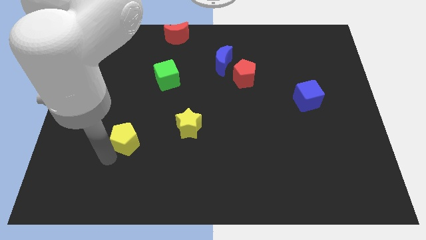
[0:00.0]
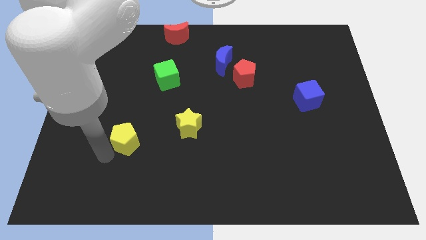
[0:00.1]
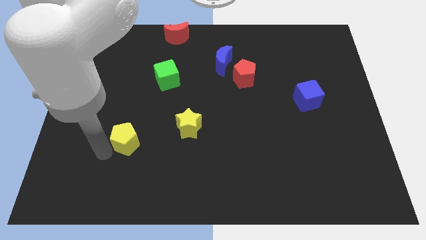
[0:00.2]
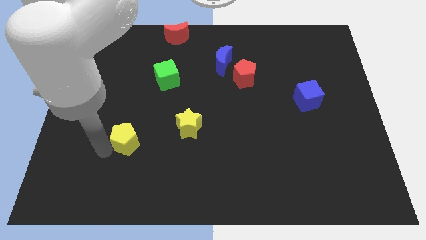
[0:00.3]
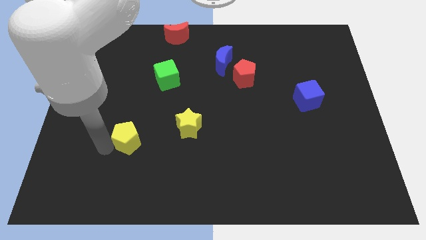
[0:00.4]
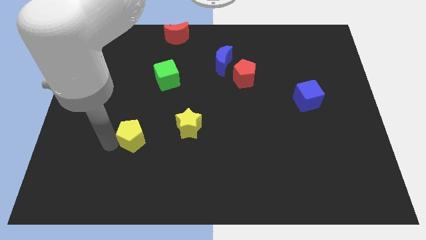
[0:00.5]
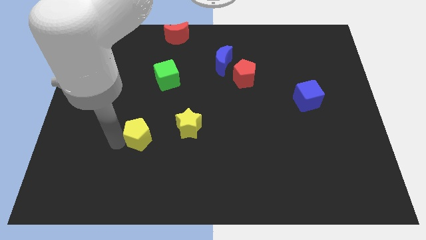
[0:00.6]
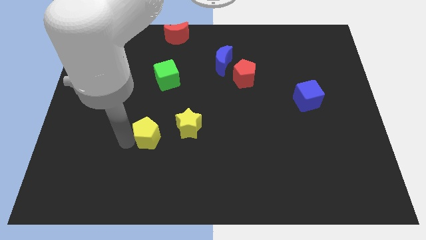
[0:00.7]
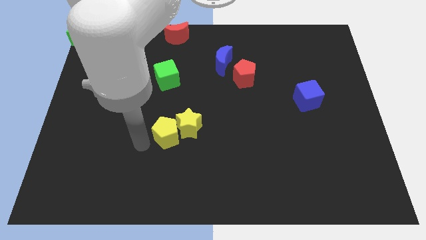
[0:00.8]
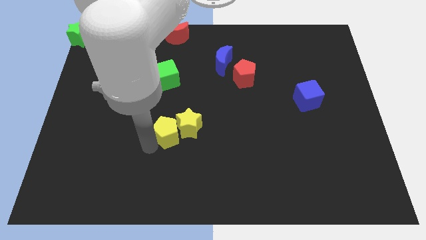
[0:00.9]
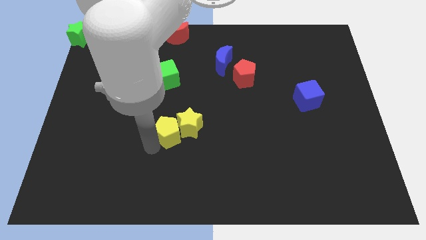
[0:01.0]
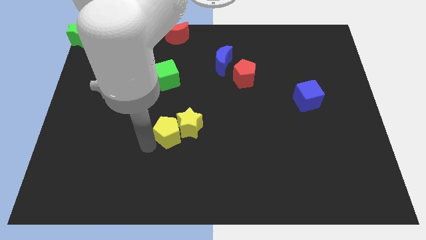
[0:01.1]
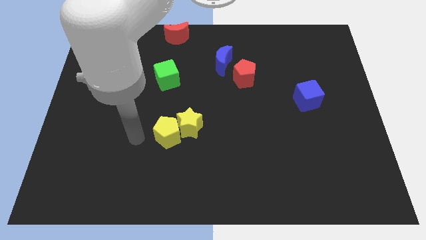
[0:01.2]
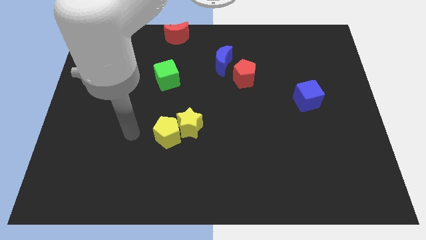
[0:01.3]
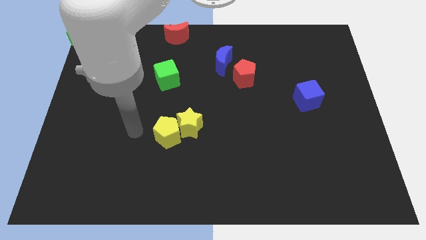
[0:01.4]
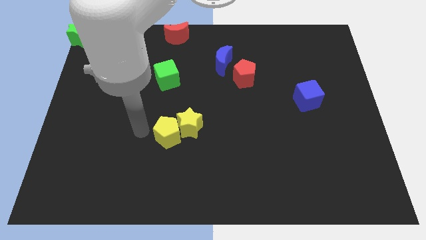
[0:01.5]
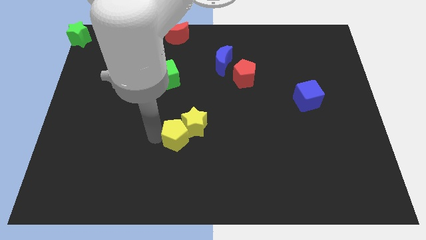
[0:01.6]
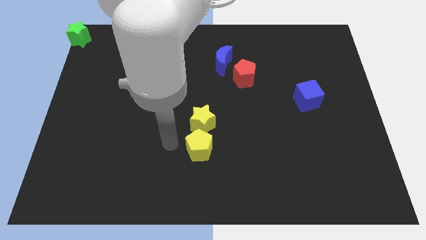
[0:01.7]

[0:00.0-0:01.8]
attach the yellow star to the yellow pentagon

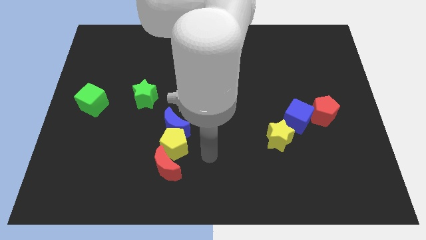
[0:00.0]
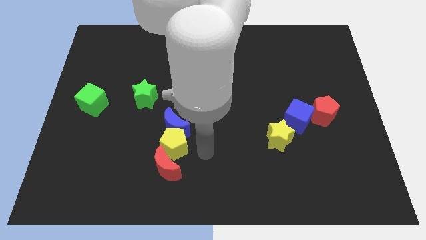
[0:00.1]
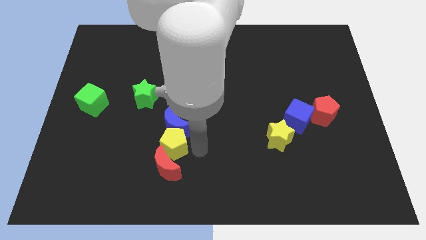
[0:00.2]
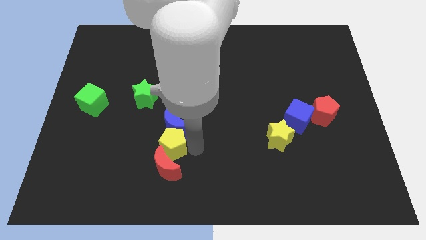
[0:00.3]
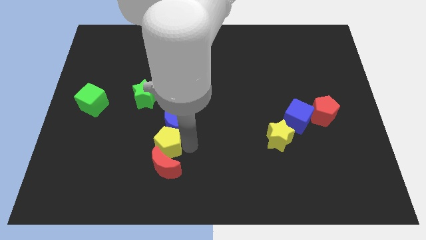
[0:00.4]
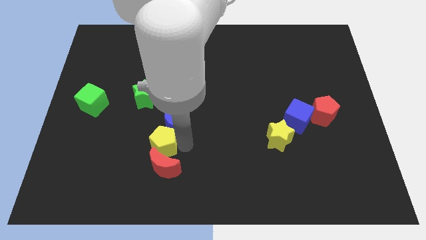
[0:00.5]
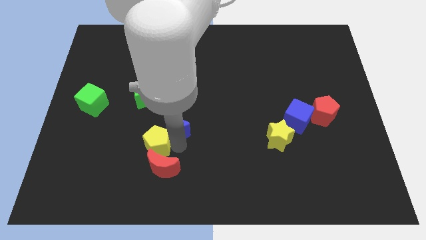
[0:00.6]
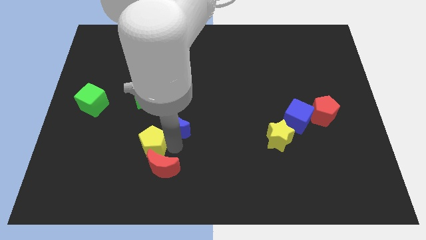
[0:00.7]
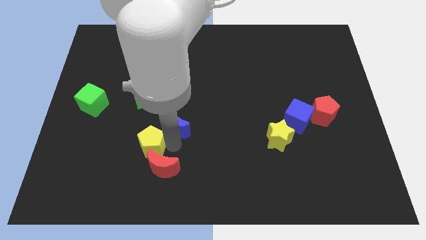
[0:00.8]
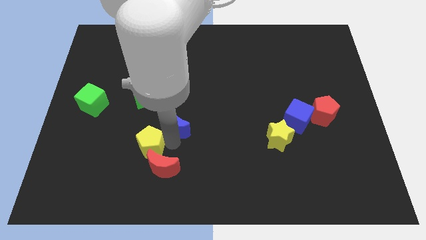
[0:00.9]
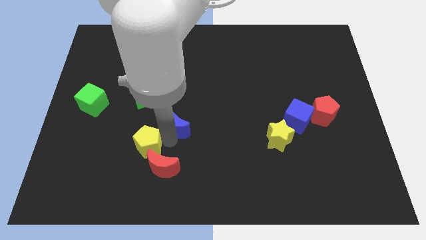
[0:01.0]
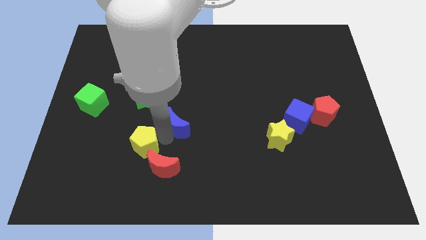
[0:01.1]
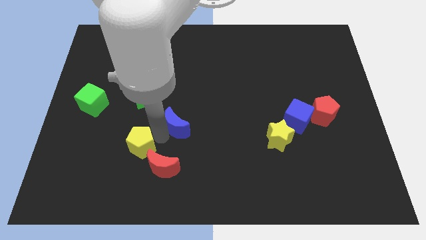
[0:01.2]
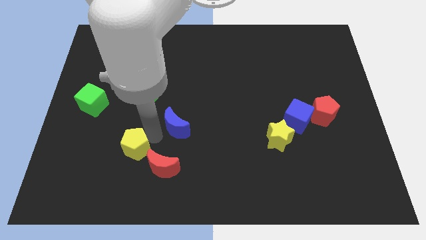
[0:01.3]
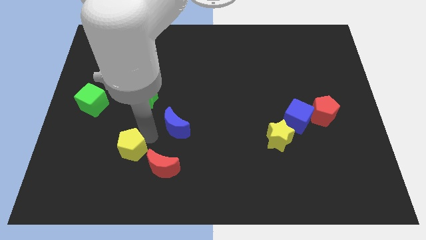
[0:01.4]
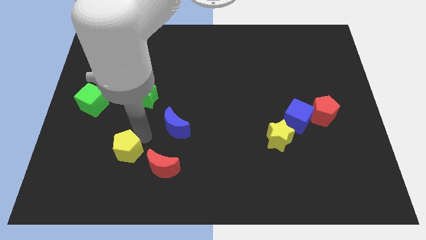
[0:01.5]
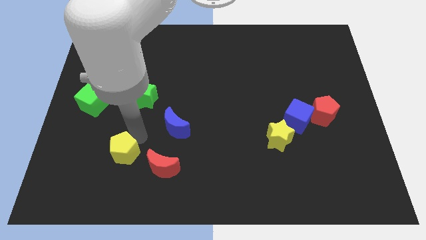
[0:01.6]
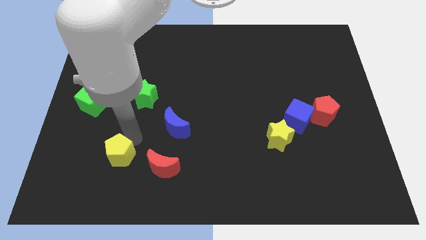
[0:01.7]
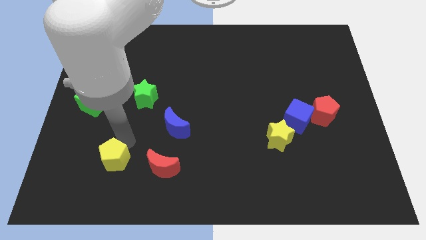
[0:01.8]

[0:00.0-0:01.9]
separate the yellow pentagon from the red and blue moons

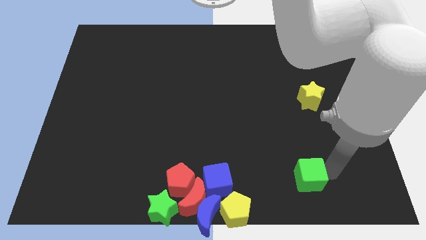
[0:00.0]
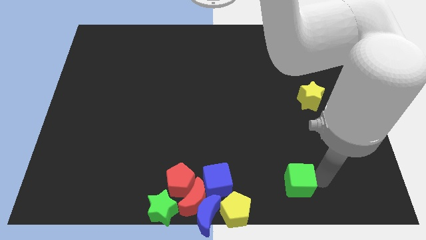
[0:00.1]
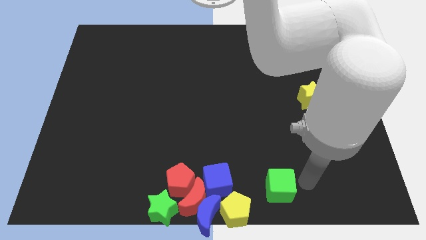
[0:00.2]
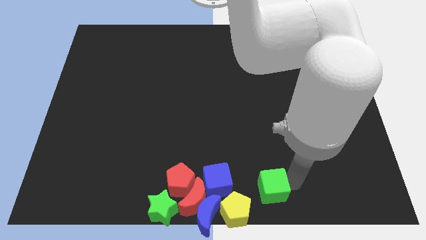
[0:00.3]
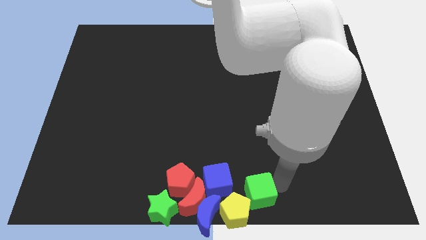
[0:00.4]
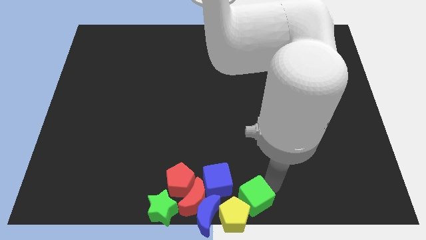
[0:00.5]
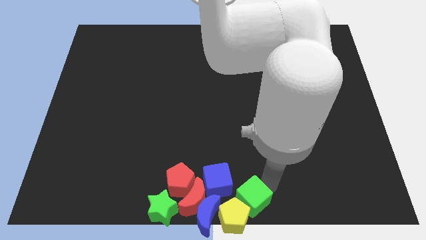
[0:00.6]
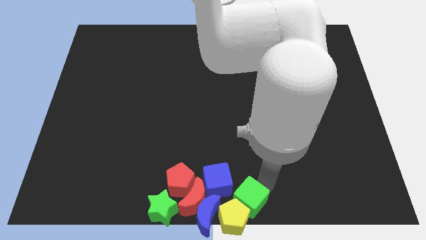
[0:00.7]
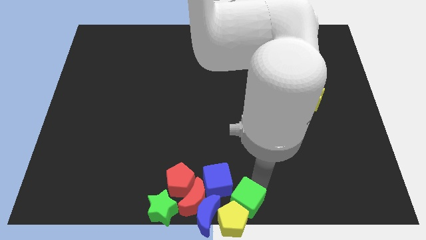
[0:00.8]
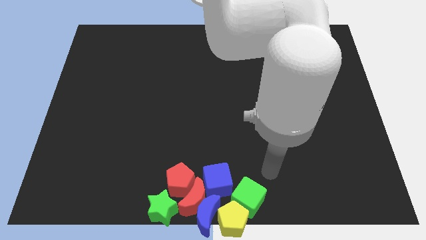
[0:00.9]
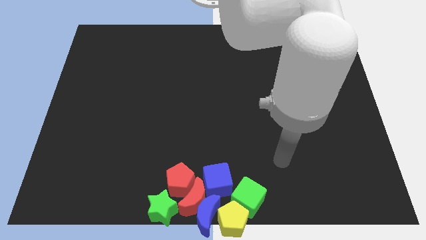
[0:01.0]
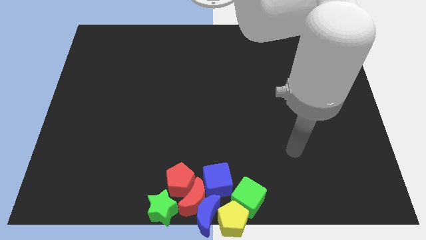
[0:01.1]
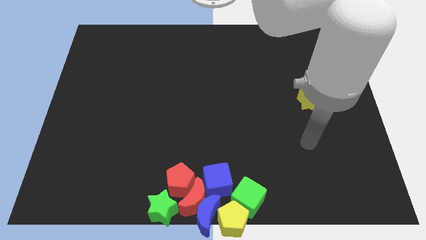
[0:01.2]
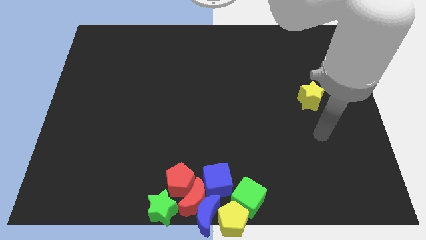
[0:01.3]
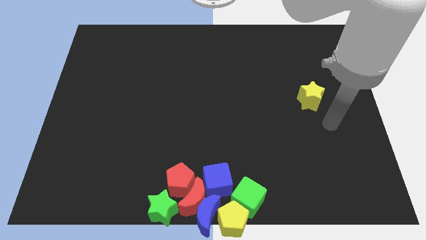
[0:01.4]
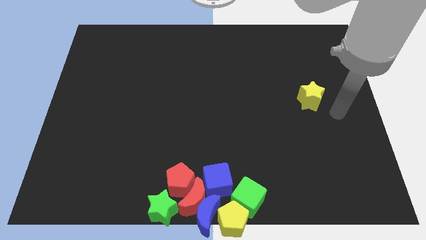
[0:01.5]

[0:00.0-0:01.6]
move the green cube towards the yellow pentagon

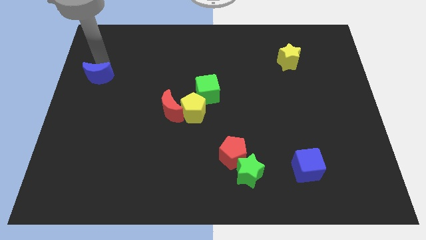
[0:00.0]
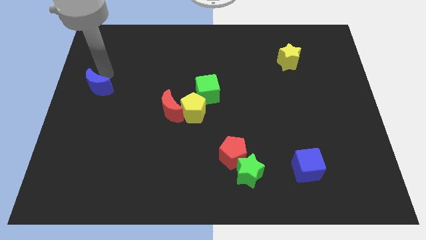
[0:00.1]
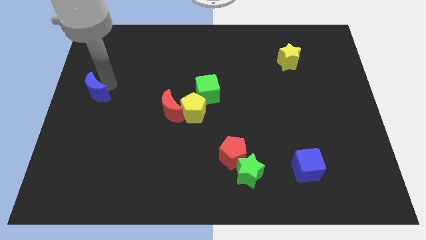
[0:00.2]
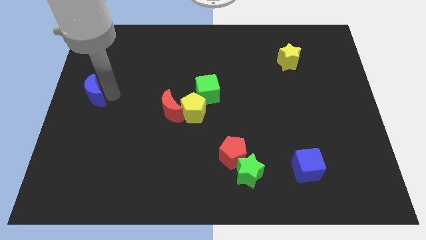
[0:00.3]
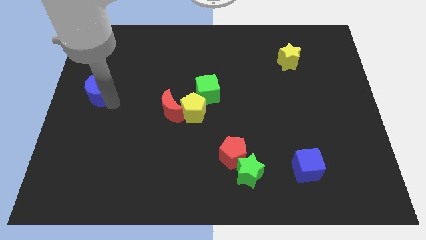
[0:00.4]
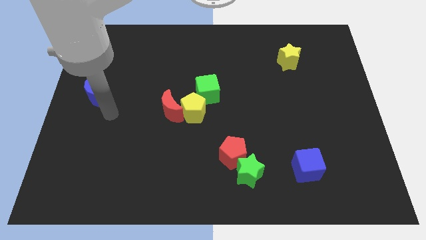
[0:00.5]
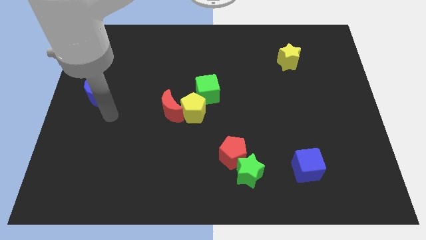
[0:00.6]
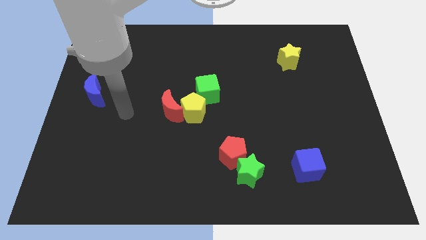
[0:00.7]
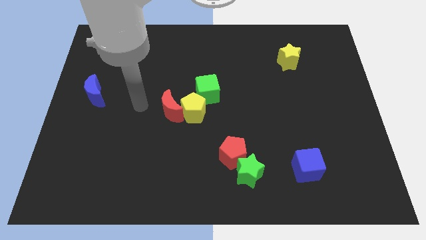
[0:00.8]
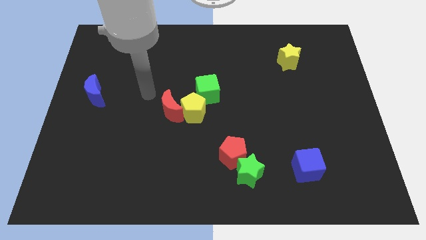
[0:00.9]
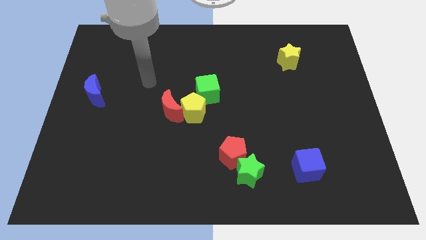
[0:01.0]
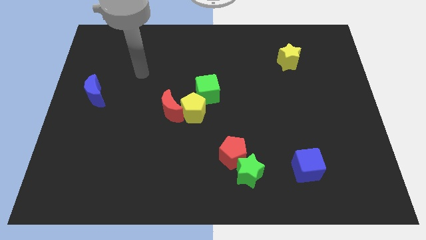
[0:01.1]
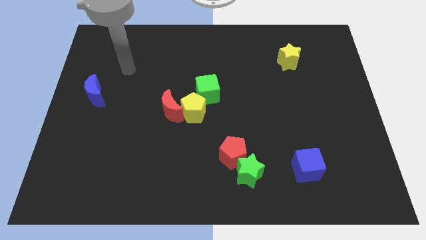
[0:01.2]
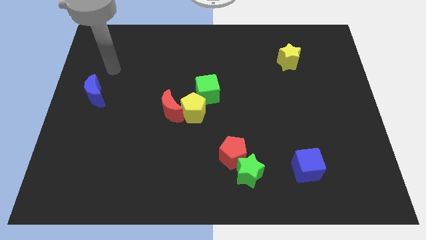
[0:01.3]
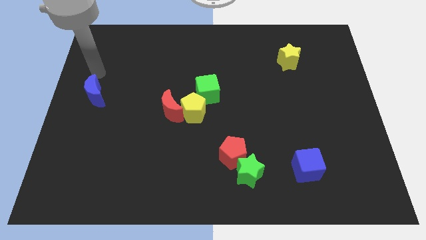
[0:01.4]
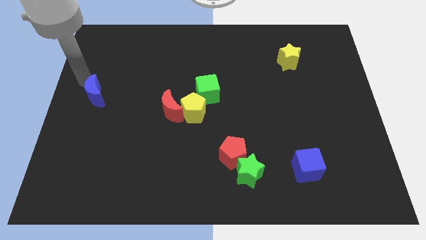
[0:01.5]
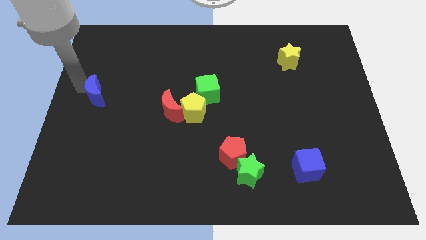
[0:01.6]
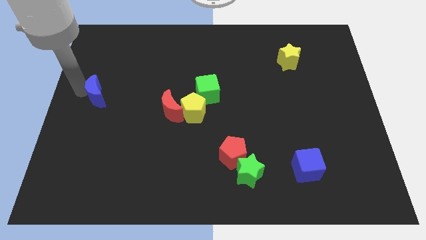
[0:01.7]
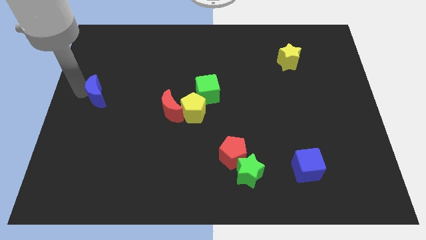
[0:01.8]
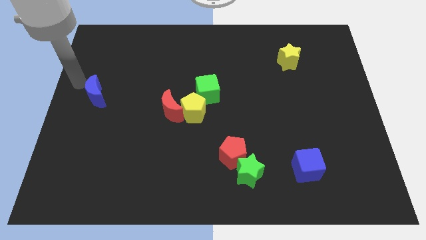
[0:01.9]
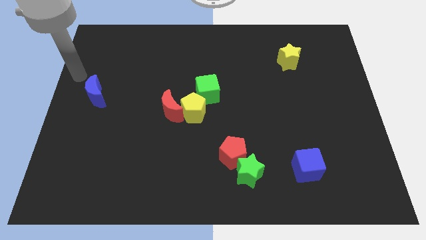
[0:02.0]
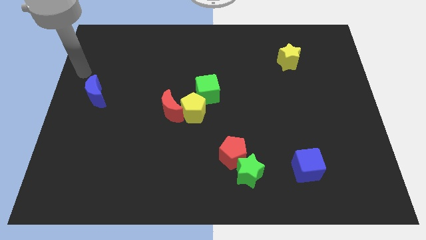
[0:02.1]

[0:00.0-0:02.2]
move the blue moon towards down

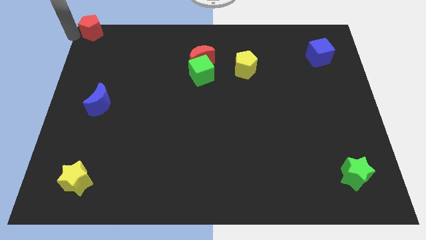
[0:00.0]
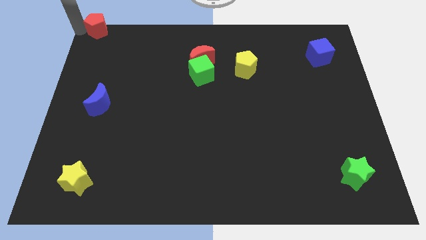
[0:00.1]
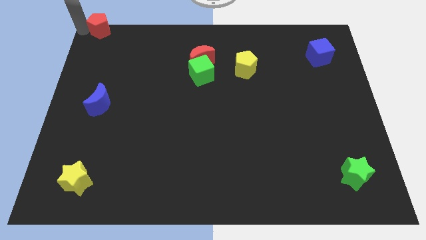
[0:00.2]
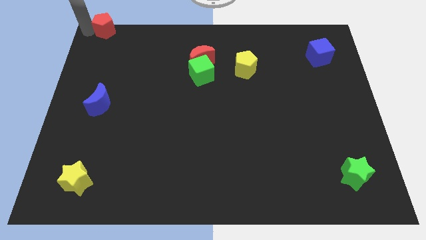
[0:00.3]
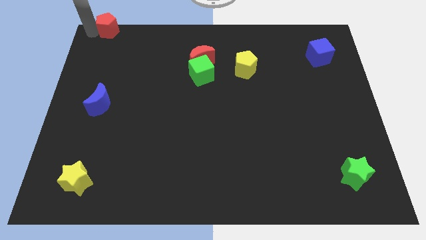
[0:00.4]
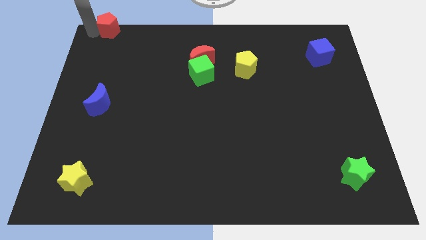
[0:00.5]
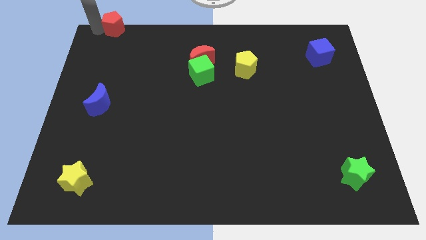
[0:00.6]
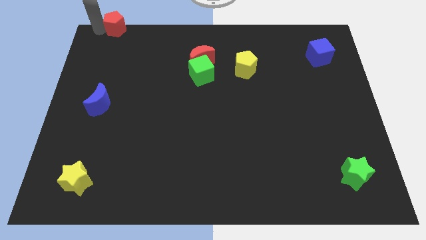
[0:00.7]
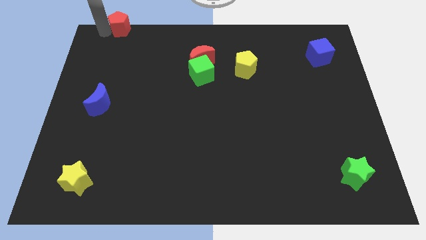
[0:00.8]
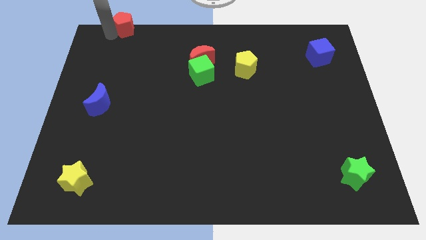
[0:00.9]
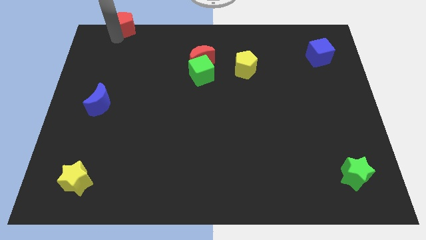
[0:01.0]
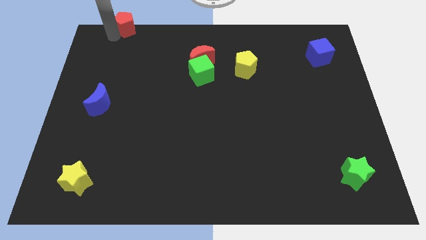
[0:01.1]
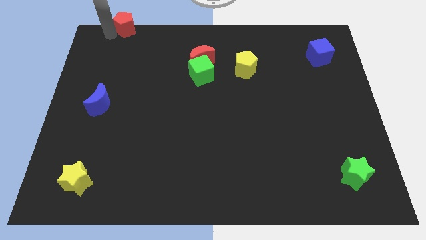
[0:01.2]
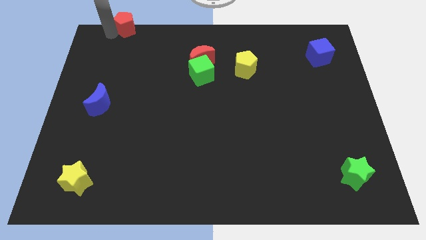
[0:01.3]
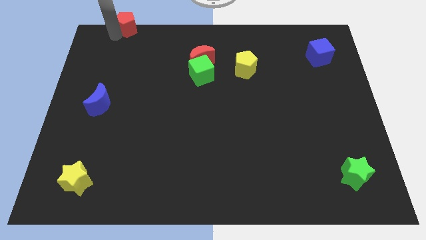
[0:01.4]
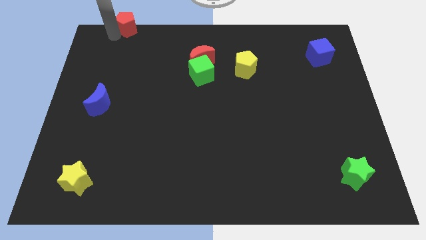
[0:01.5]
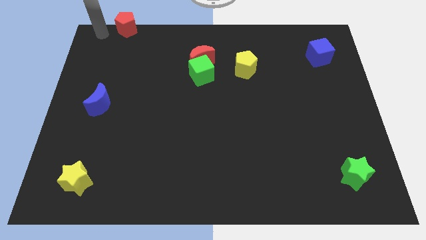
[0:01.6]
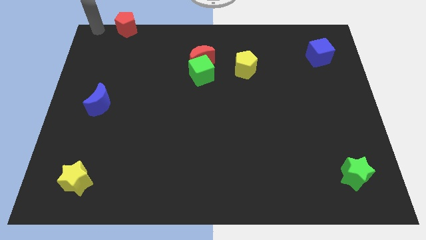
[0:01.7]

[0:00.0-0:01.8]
slightly push the red pentagon to the right
